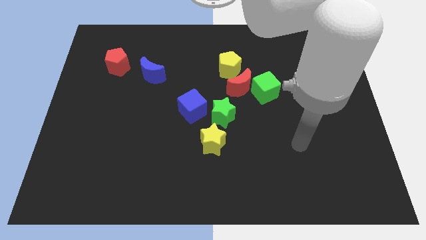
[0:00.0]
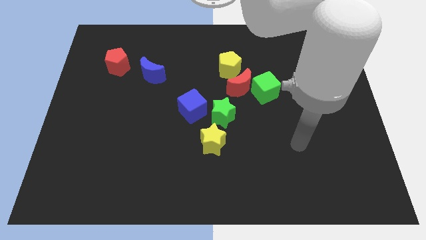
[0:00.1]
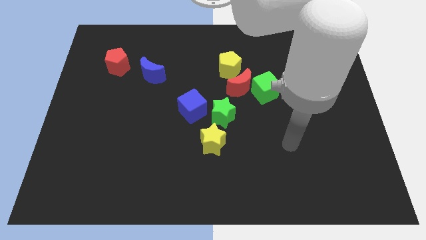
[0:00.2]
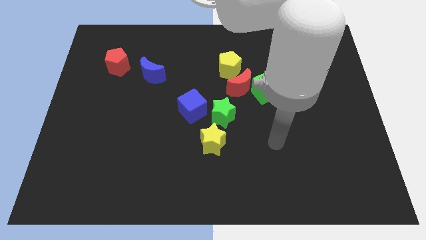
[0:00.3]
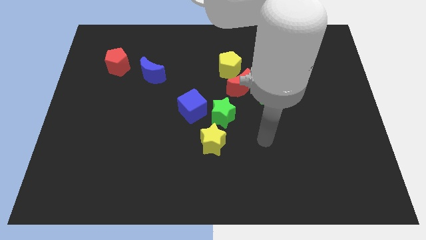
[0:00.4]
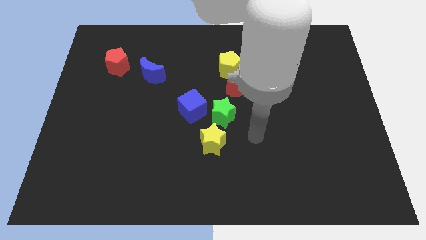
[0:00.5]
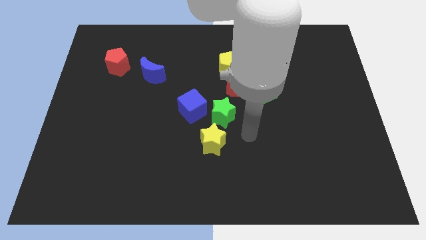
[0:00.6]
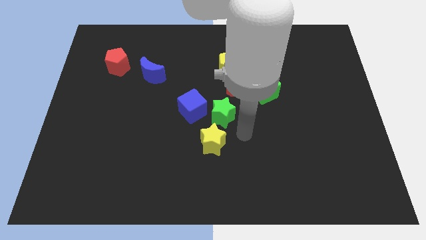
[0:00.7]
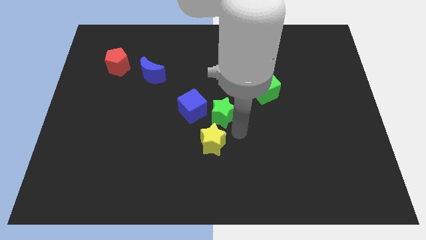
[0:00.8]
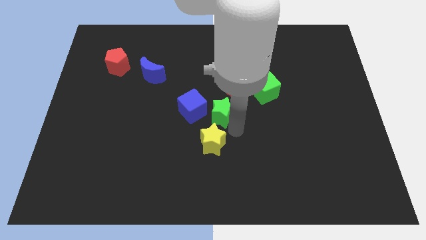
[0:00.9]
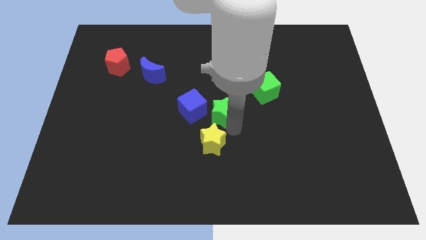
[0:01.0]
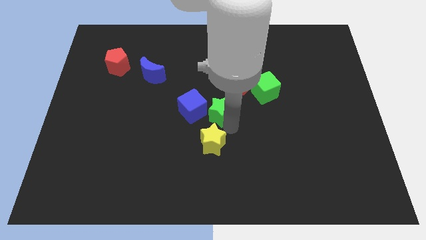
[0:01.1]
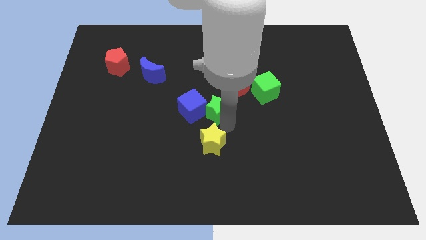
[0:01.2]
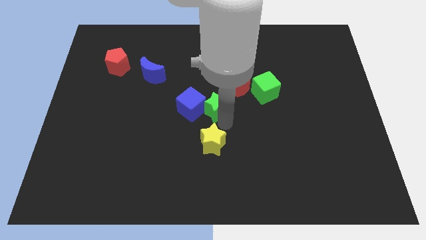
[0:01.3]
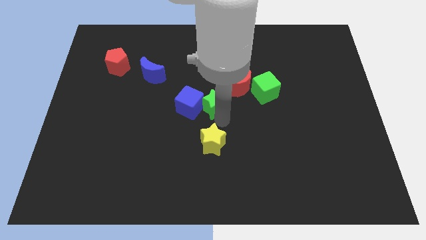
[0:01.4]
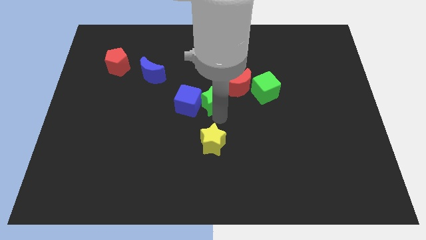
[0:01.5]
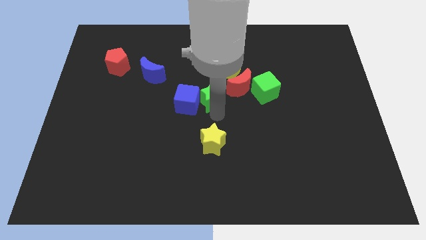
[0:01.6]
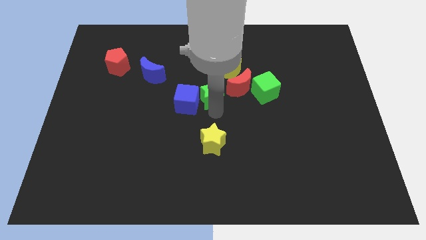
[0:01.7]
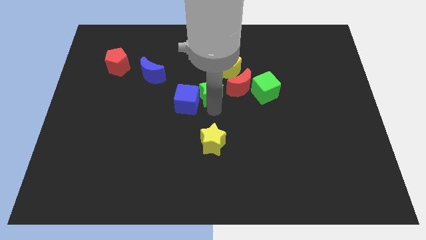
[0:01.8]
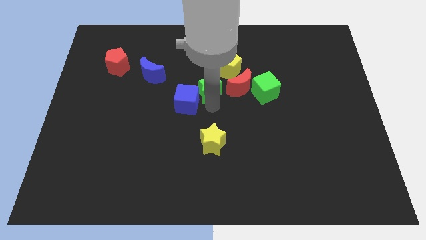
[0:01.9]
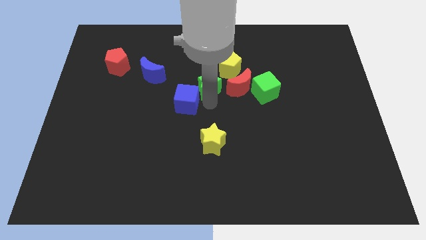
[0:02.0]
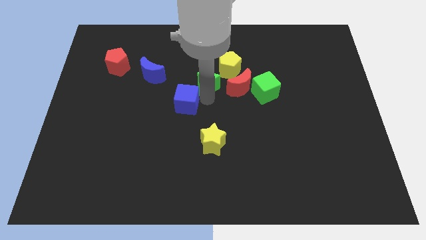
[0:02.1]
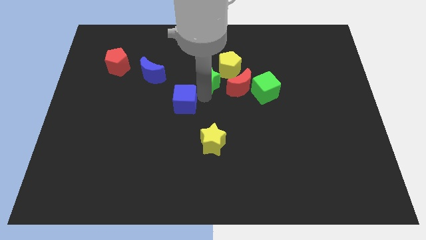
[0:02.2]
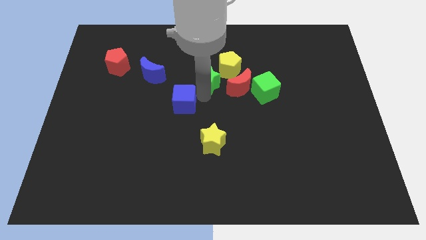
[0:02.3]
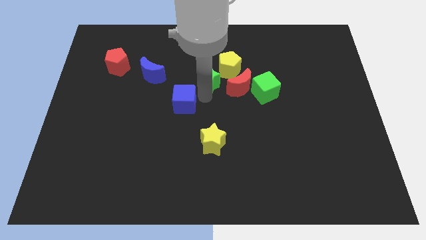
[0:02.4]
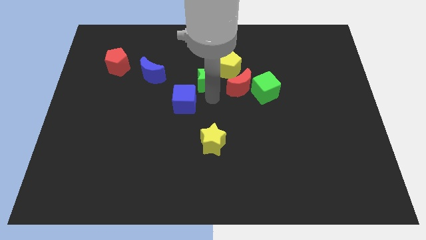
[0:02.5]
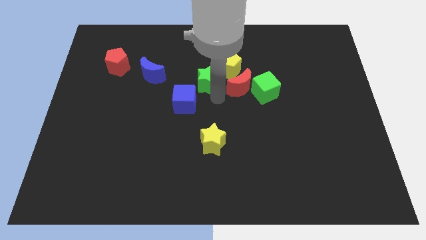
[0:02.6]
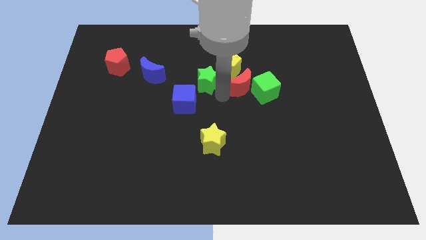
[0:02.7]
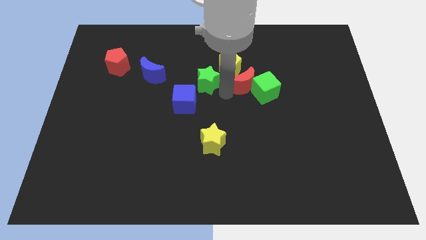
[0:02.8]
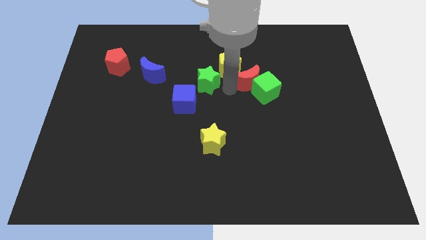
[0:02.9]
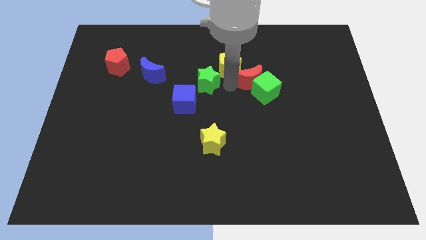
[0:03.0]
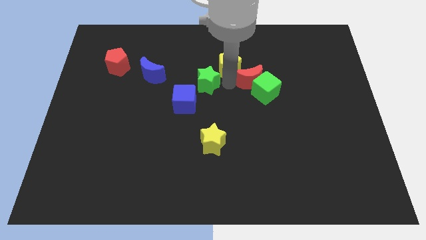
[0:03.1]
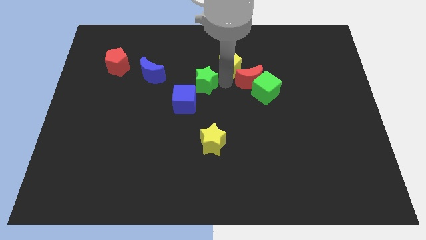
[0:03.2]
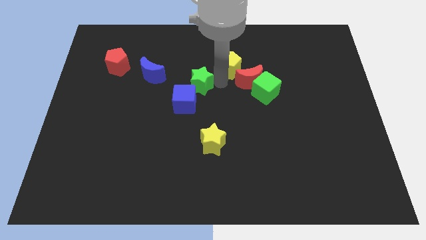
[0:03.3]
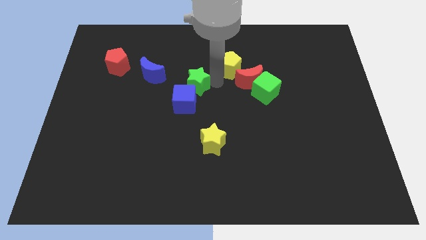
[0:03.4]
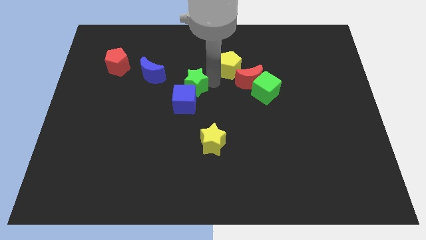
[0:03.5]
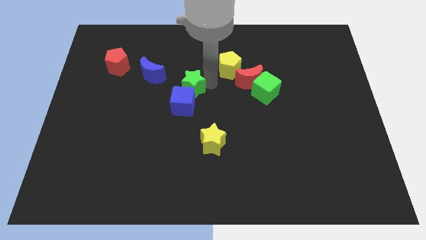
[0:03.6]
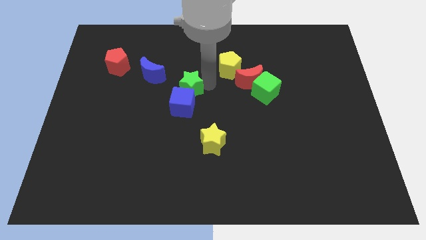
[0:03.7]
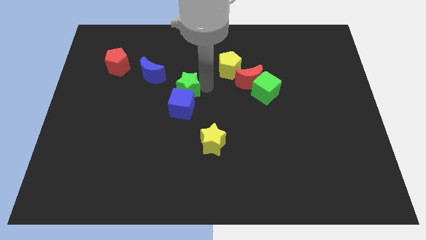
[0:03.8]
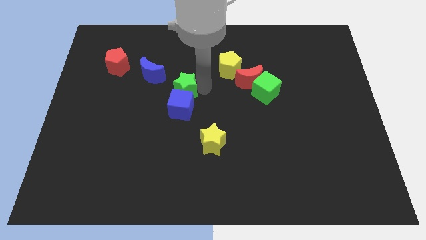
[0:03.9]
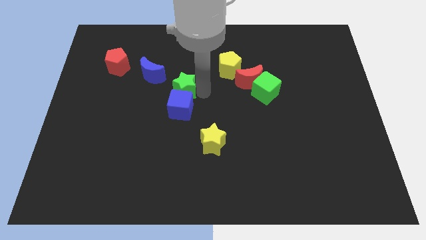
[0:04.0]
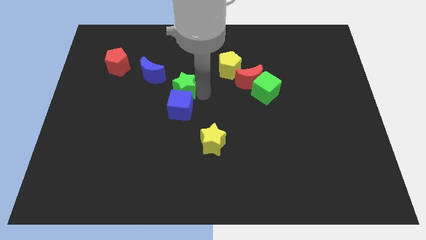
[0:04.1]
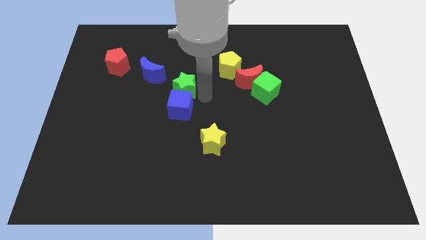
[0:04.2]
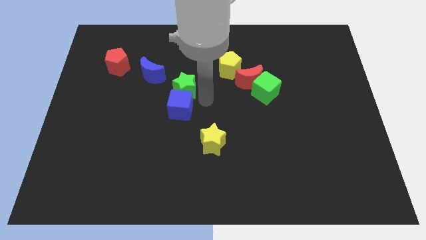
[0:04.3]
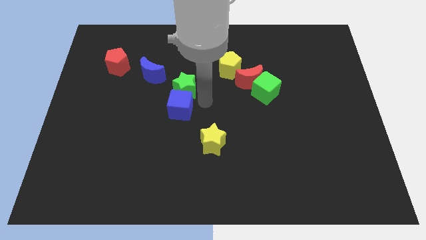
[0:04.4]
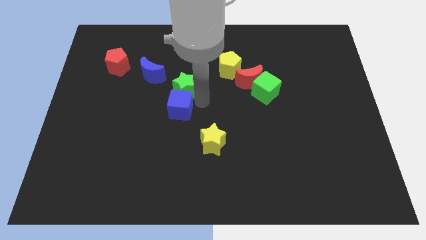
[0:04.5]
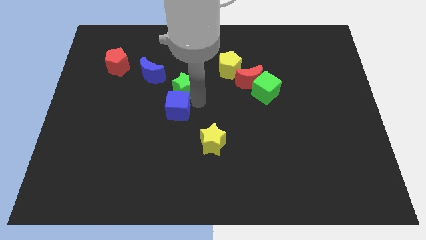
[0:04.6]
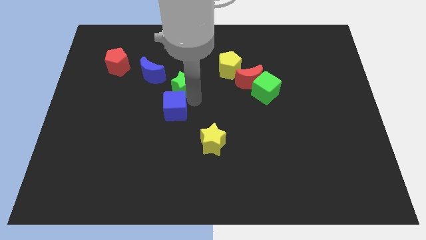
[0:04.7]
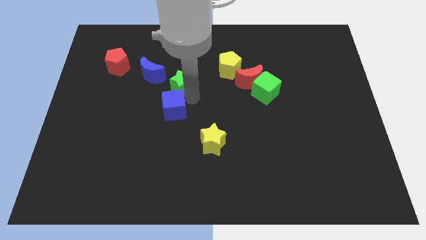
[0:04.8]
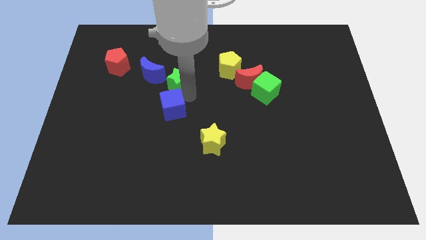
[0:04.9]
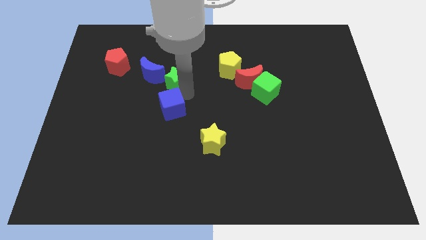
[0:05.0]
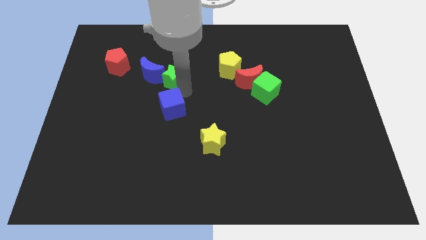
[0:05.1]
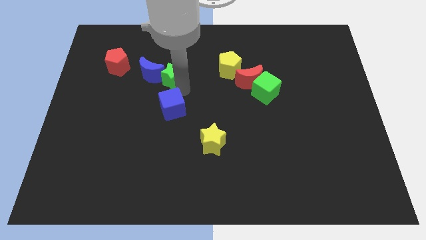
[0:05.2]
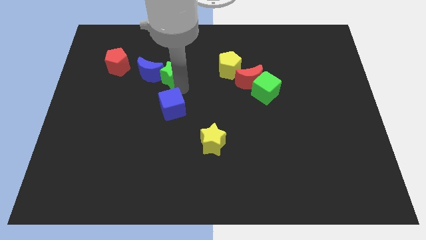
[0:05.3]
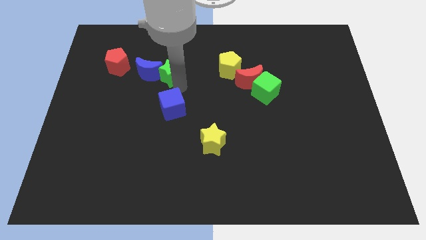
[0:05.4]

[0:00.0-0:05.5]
put the green star next to the blue moon

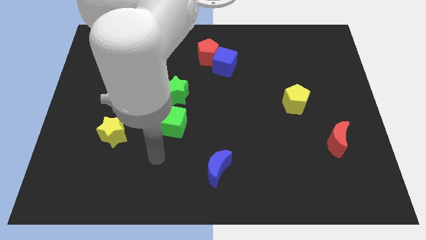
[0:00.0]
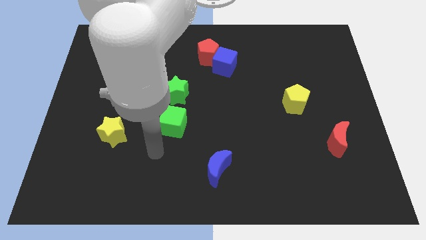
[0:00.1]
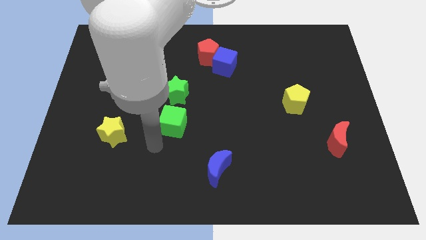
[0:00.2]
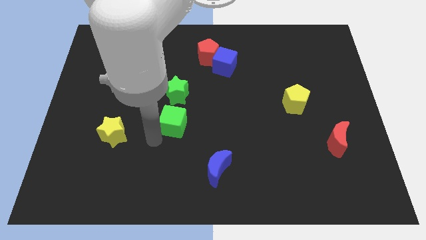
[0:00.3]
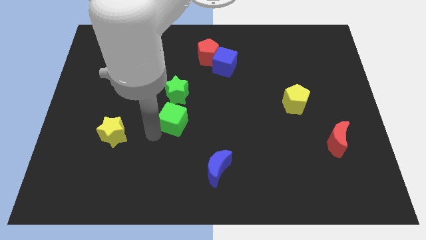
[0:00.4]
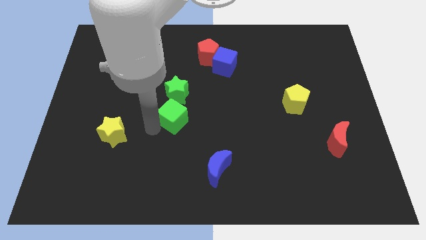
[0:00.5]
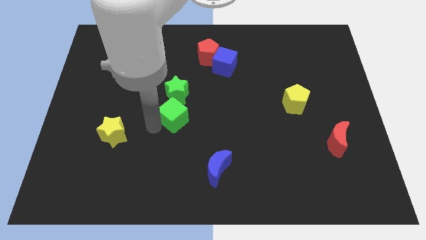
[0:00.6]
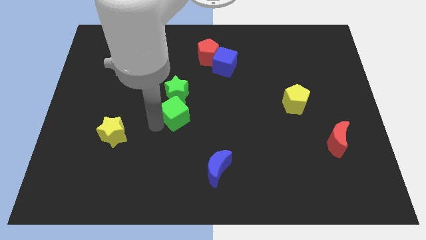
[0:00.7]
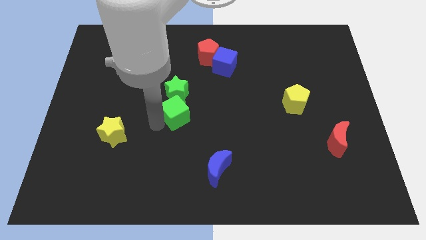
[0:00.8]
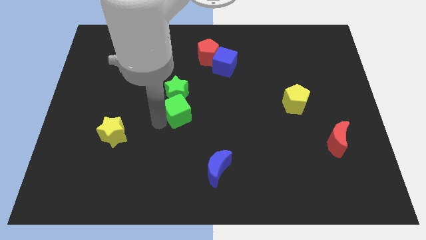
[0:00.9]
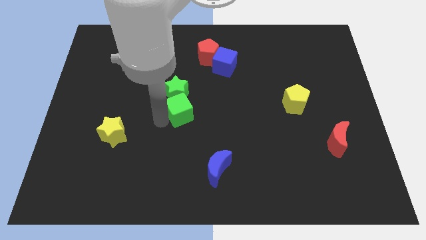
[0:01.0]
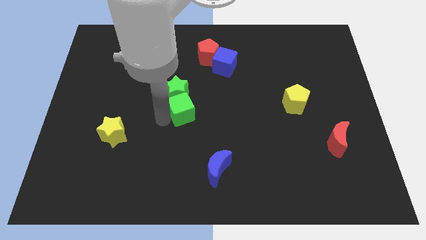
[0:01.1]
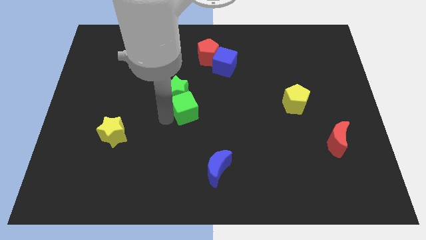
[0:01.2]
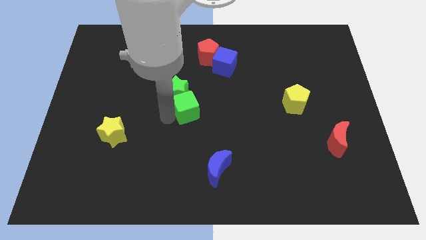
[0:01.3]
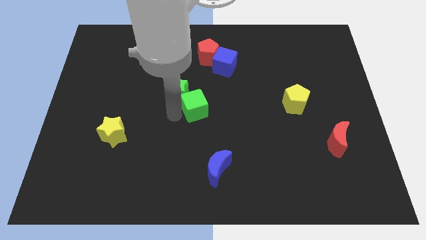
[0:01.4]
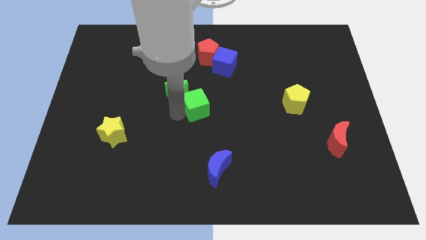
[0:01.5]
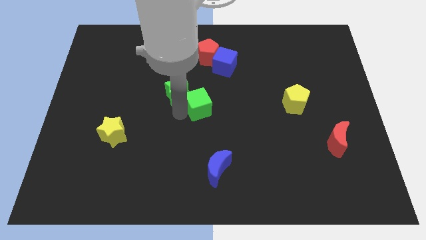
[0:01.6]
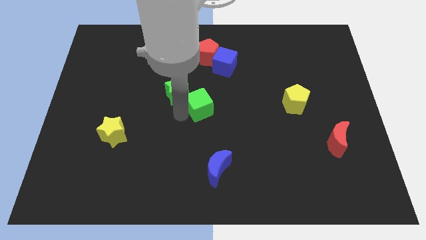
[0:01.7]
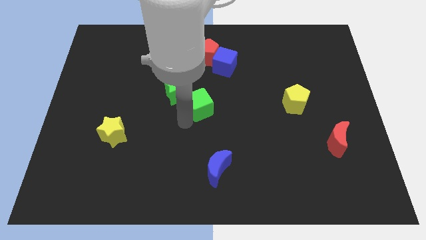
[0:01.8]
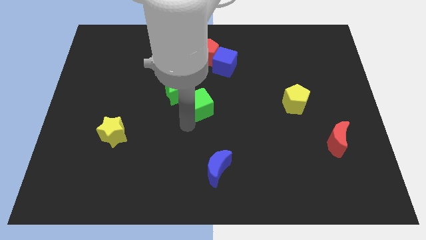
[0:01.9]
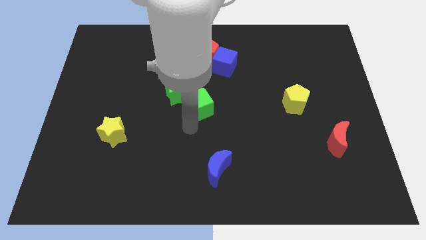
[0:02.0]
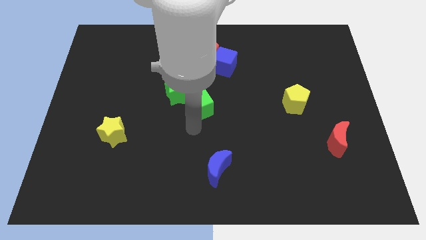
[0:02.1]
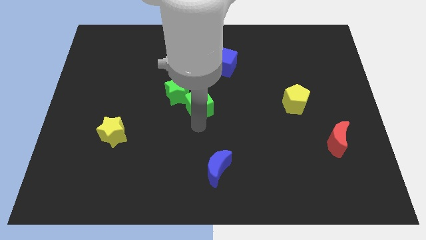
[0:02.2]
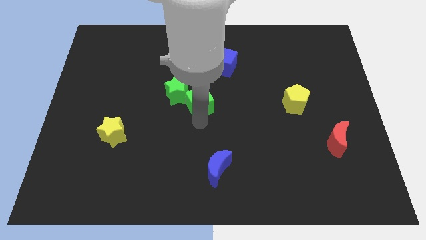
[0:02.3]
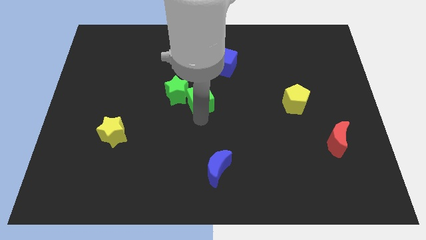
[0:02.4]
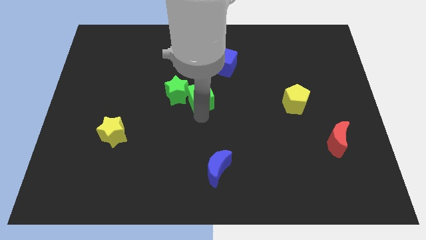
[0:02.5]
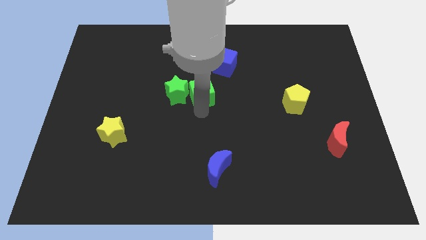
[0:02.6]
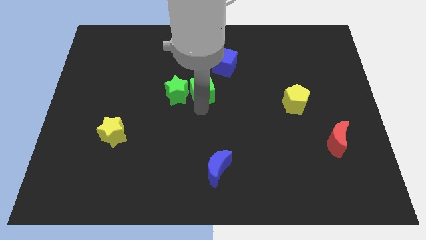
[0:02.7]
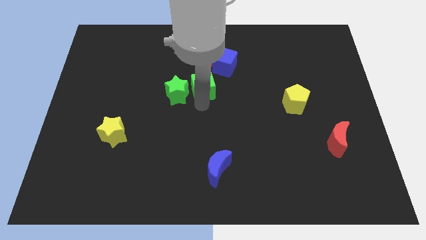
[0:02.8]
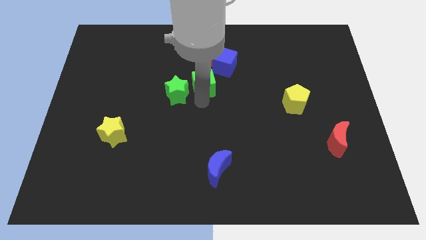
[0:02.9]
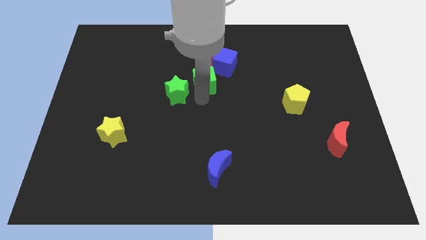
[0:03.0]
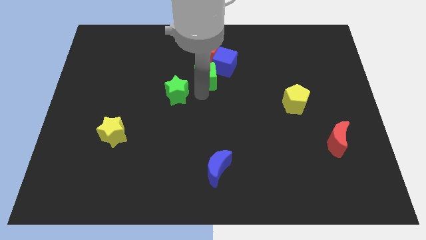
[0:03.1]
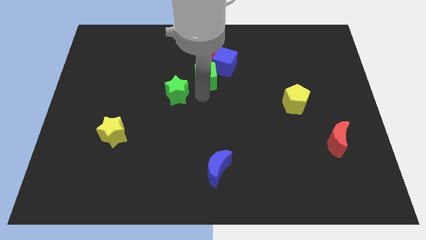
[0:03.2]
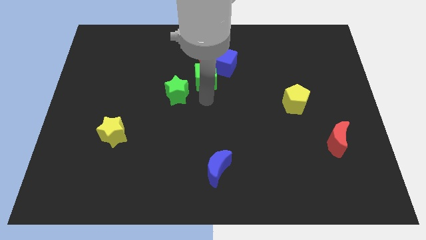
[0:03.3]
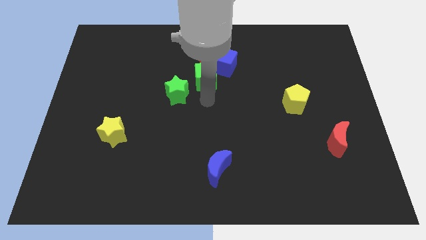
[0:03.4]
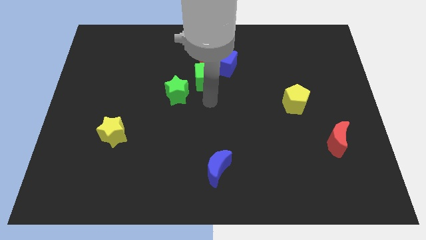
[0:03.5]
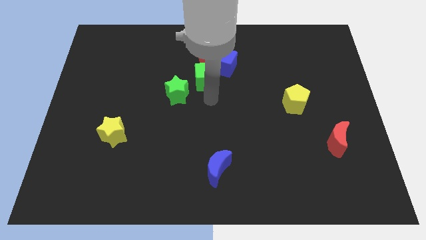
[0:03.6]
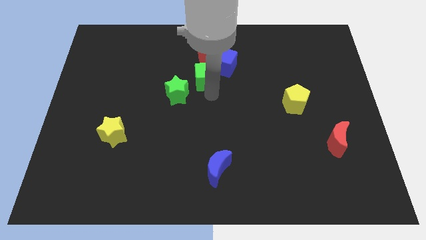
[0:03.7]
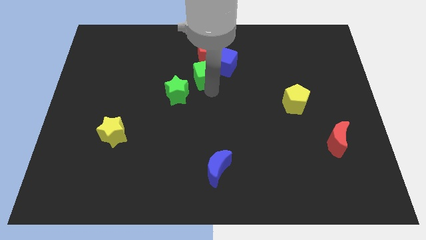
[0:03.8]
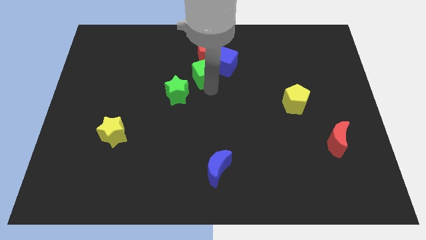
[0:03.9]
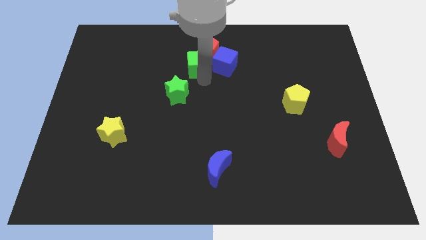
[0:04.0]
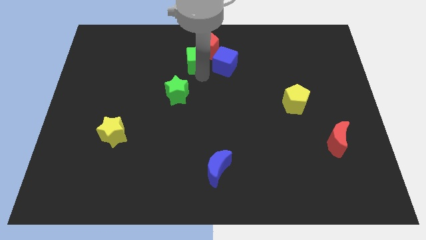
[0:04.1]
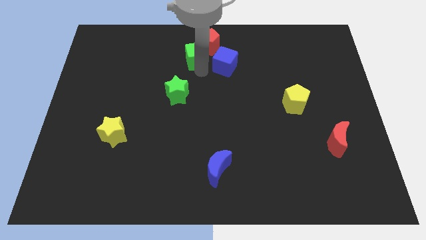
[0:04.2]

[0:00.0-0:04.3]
move the green cube to the red pentagon
